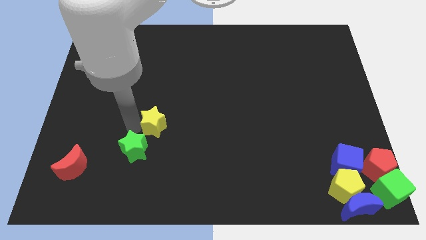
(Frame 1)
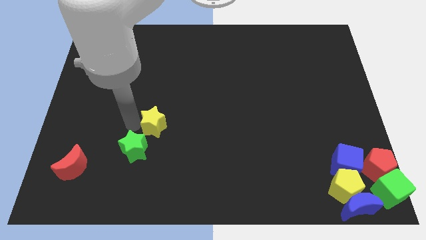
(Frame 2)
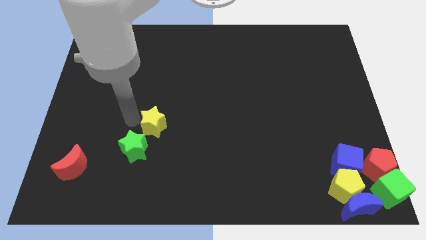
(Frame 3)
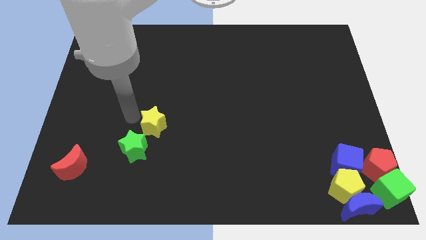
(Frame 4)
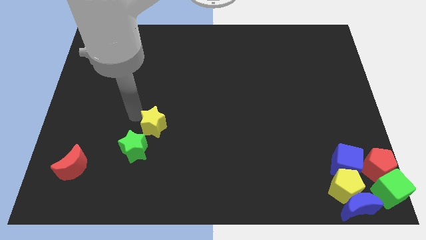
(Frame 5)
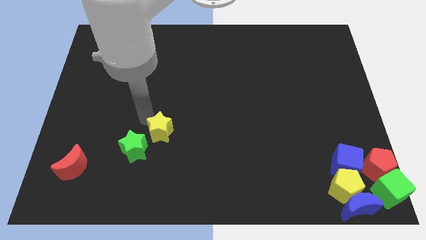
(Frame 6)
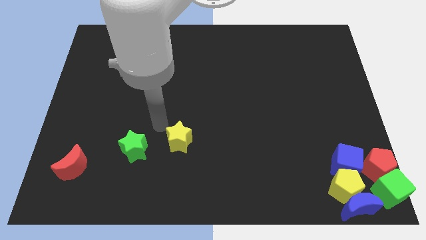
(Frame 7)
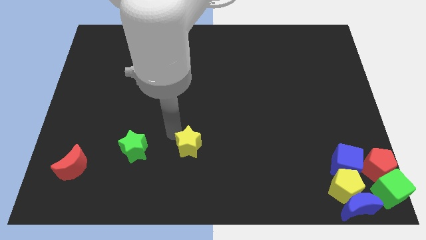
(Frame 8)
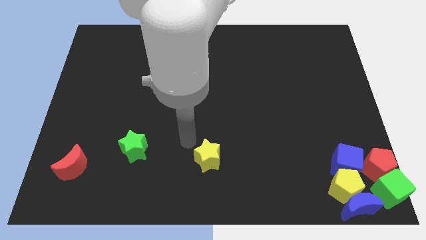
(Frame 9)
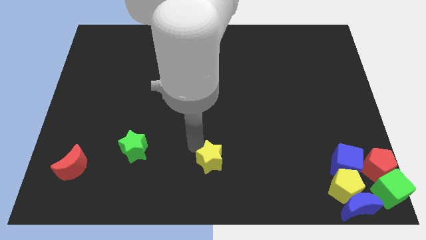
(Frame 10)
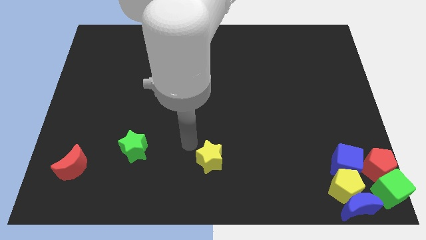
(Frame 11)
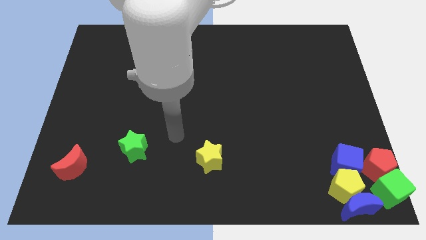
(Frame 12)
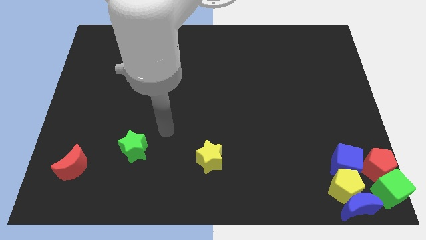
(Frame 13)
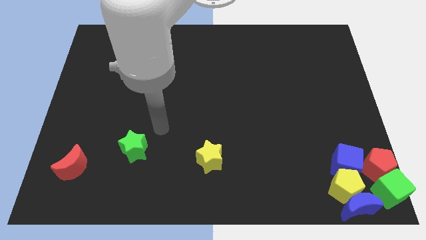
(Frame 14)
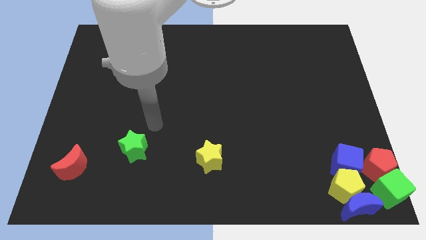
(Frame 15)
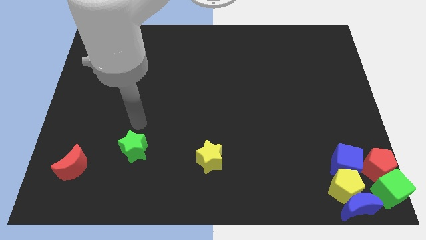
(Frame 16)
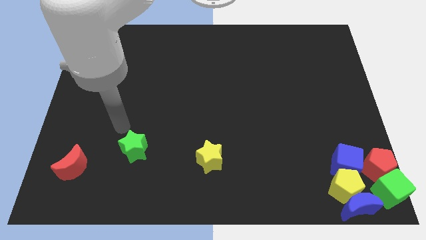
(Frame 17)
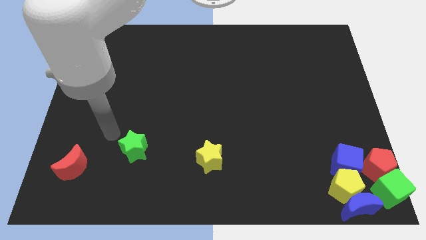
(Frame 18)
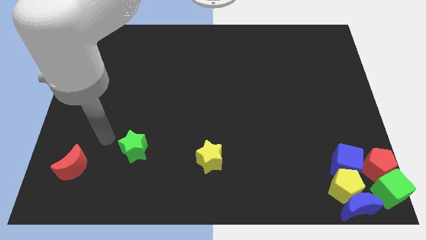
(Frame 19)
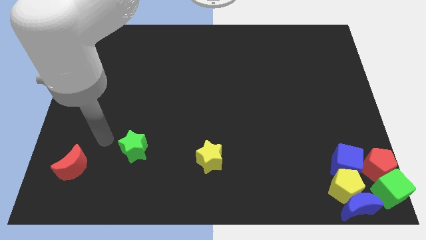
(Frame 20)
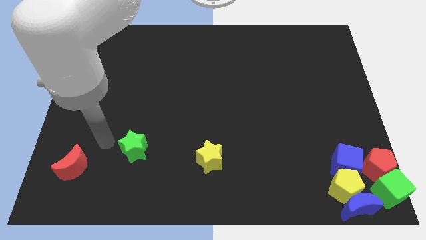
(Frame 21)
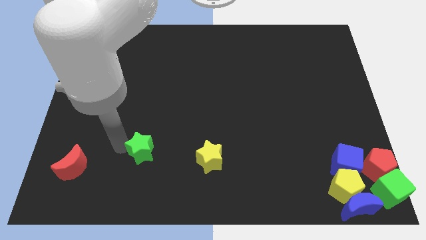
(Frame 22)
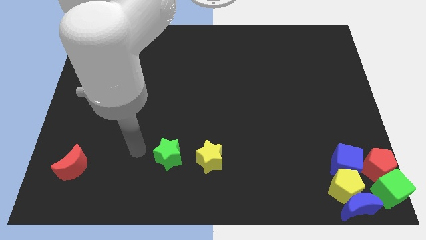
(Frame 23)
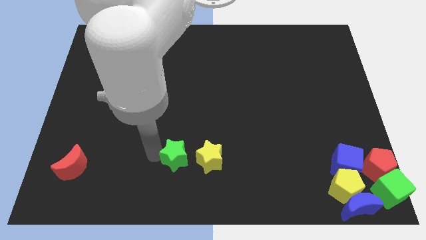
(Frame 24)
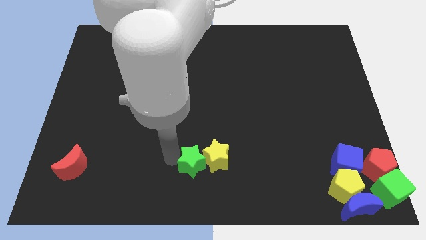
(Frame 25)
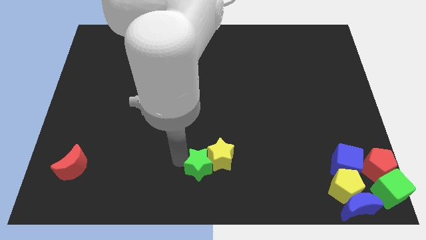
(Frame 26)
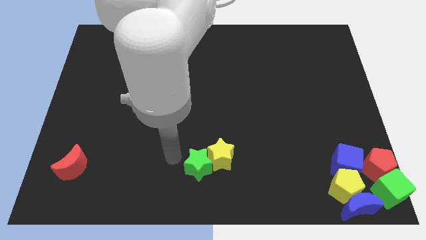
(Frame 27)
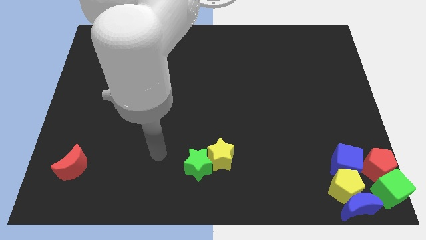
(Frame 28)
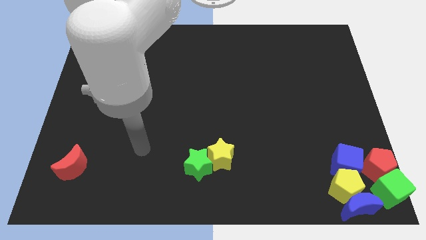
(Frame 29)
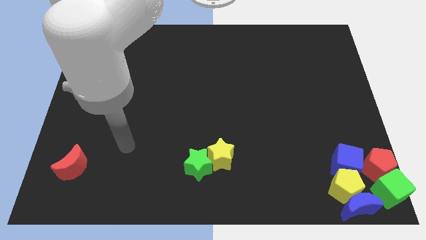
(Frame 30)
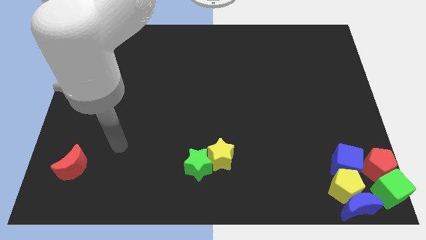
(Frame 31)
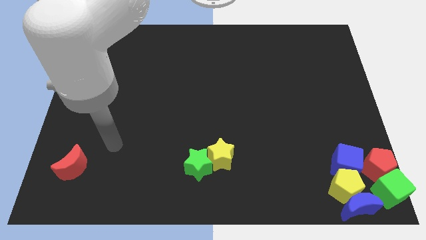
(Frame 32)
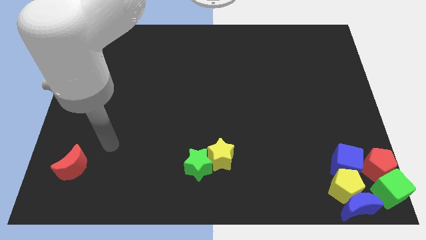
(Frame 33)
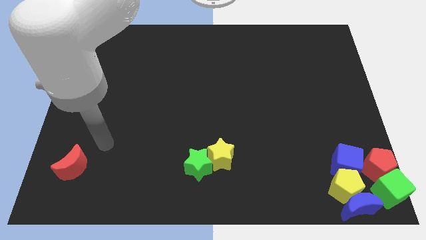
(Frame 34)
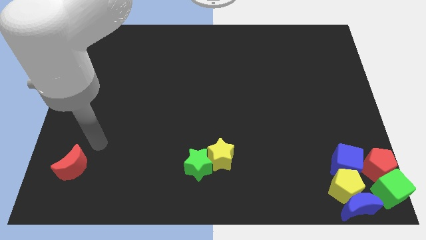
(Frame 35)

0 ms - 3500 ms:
push the yellow star and green star towards the bottom center of the board

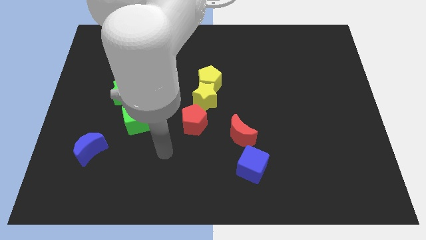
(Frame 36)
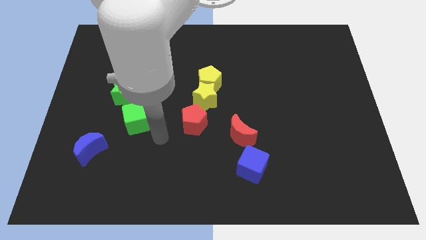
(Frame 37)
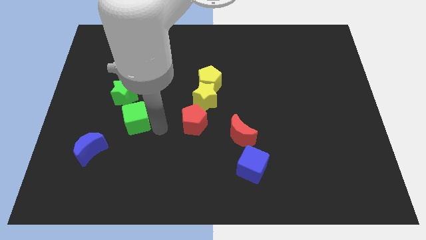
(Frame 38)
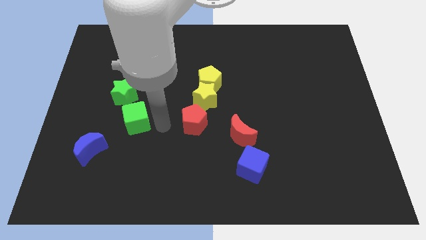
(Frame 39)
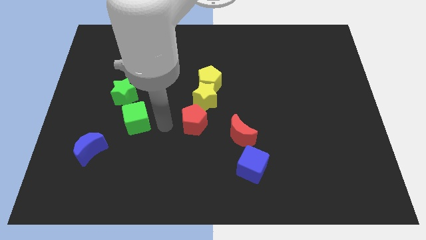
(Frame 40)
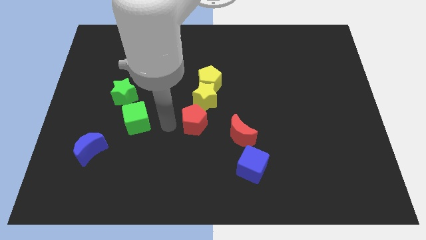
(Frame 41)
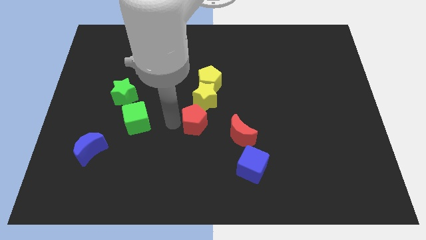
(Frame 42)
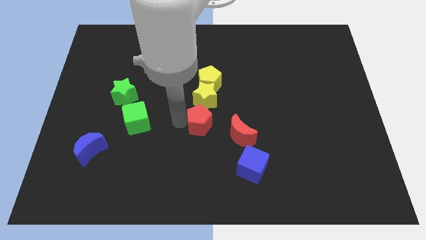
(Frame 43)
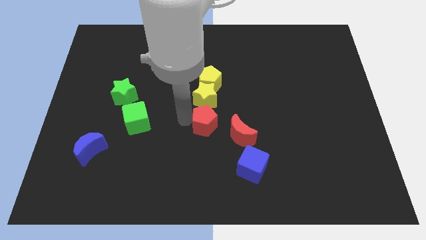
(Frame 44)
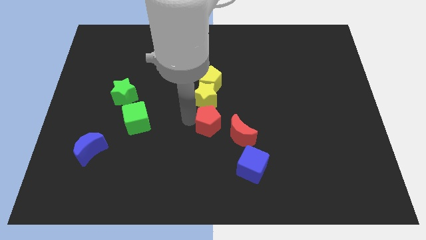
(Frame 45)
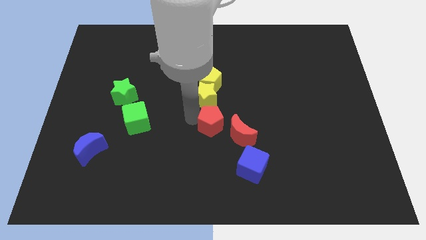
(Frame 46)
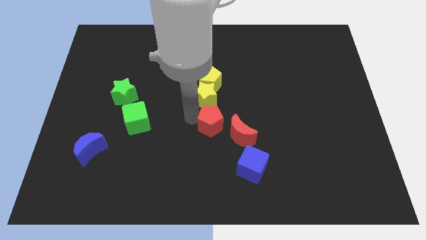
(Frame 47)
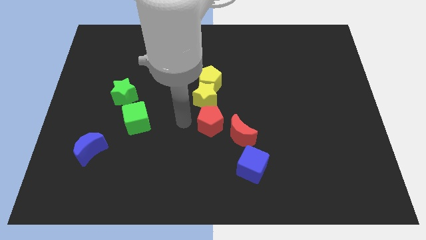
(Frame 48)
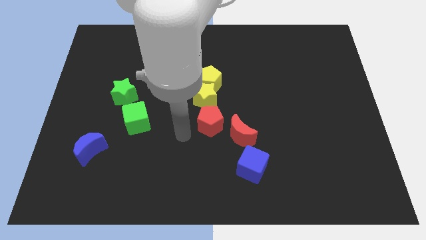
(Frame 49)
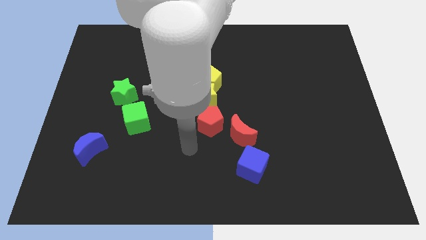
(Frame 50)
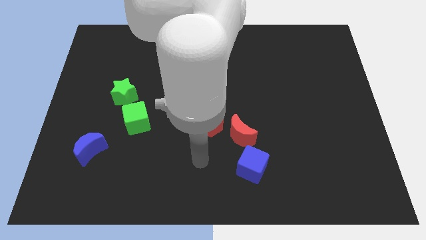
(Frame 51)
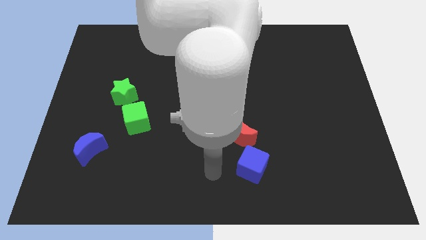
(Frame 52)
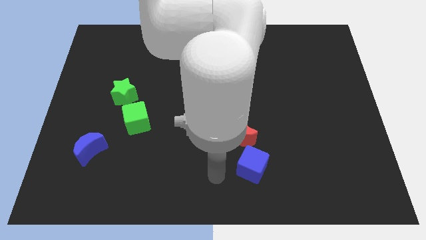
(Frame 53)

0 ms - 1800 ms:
push red pentagon close to the red moon

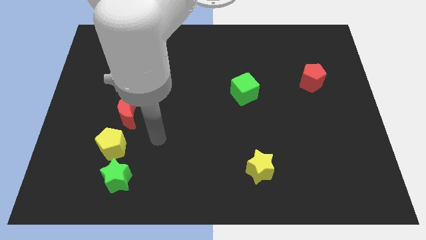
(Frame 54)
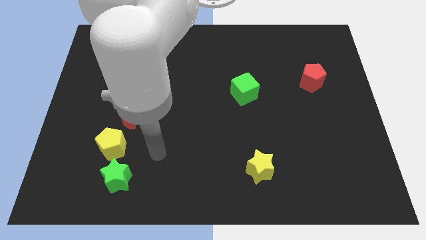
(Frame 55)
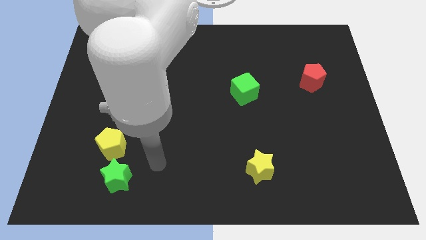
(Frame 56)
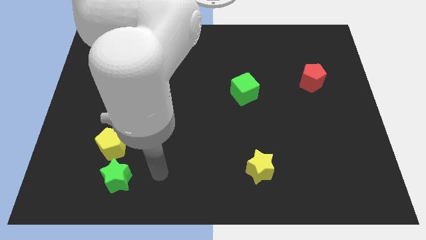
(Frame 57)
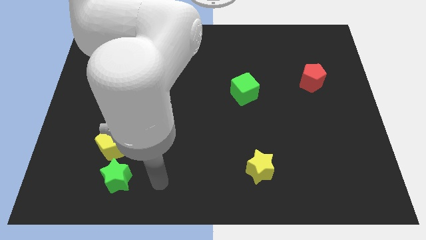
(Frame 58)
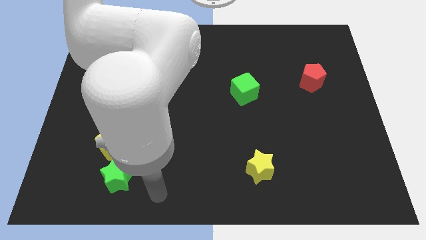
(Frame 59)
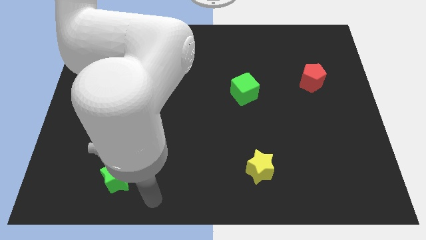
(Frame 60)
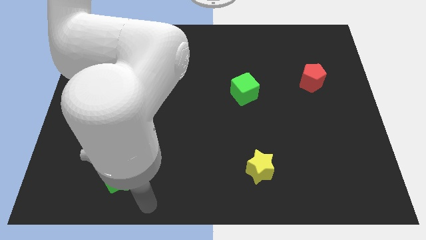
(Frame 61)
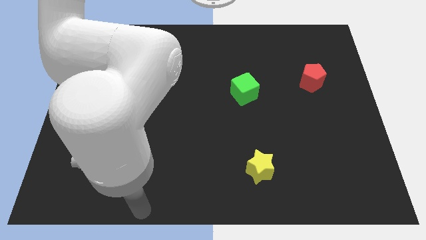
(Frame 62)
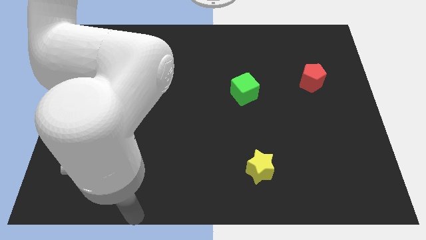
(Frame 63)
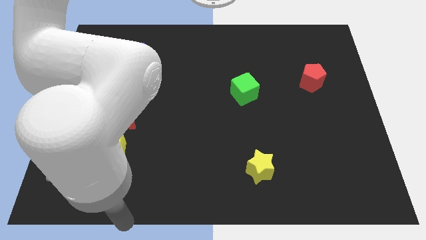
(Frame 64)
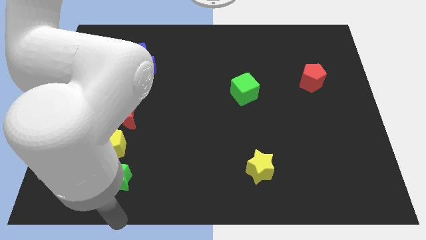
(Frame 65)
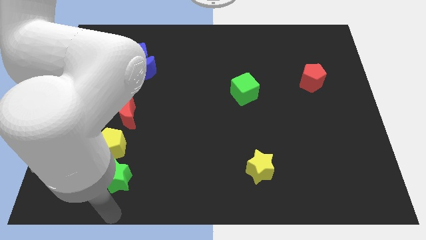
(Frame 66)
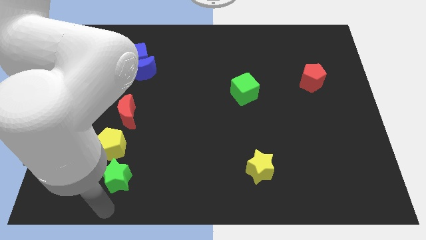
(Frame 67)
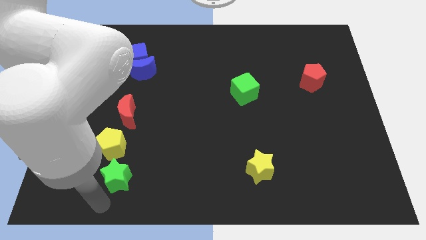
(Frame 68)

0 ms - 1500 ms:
slide your hand to the bottom of the green star

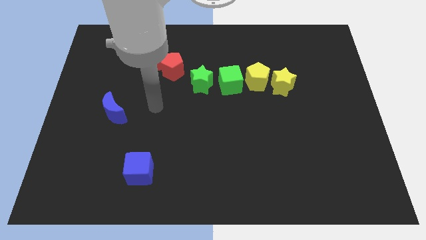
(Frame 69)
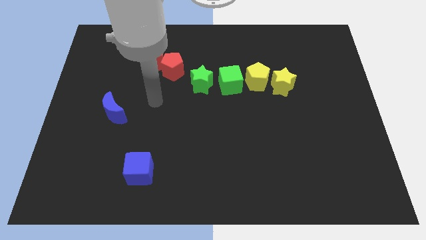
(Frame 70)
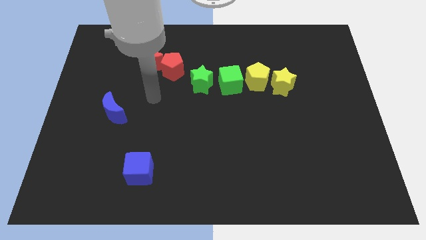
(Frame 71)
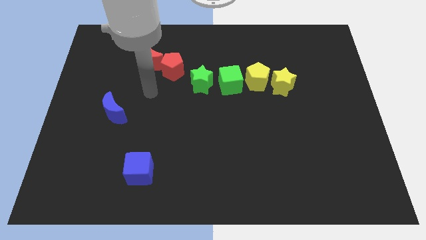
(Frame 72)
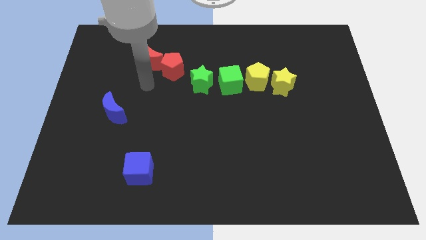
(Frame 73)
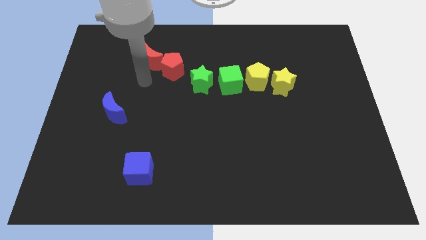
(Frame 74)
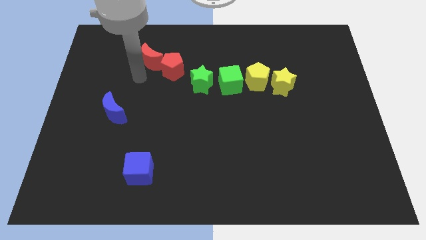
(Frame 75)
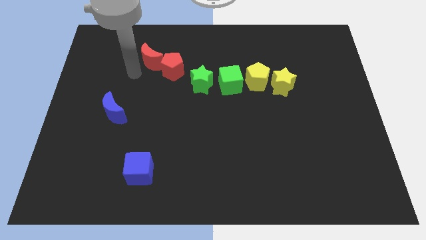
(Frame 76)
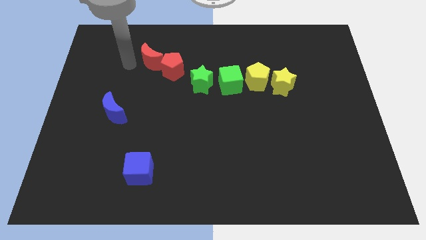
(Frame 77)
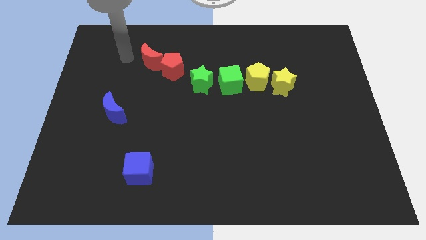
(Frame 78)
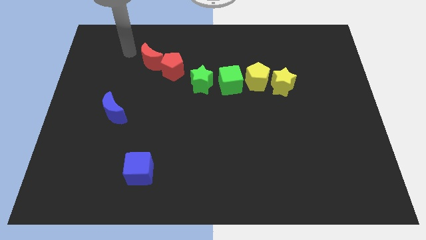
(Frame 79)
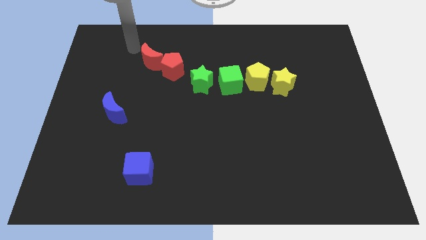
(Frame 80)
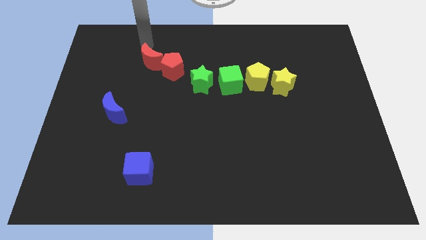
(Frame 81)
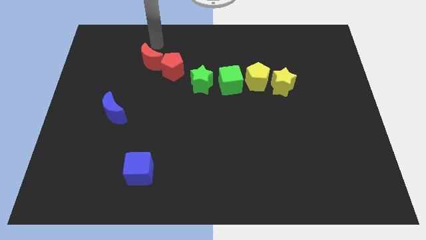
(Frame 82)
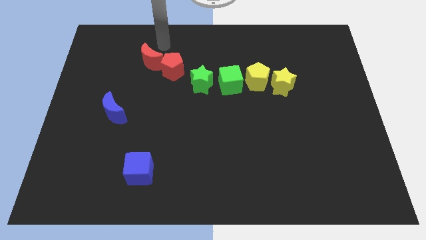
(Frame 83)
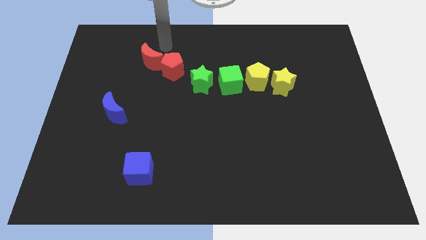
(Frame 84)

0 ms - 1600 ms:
move the arm to the top of red moon

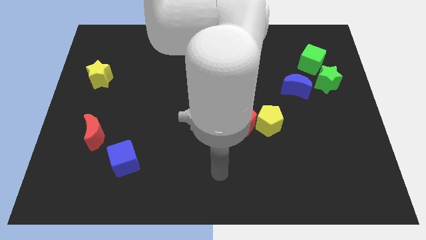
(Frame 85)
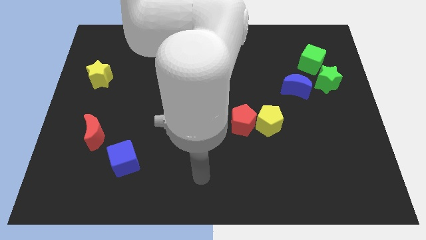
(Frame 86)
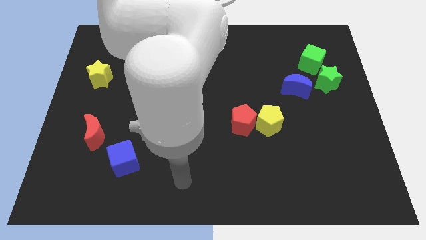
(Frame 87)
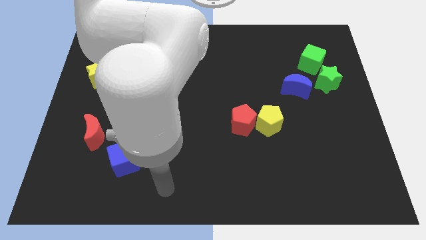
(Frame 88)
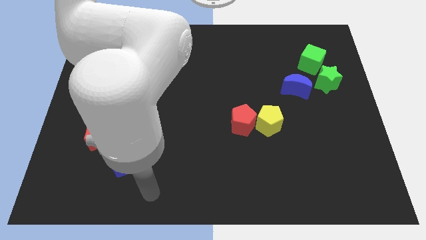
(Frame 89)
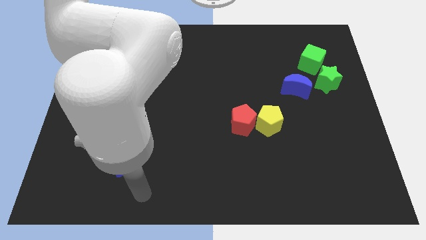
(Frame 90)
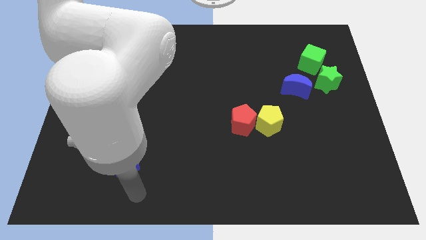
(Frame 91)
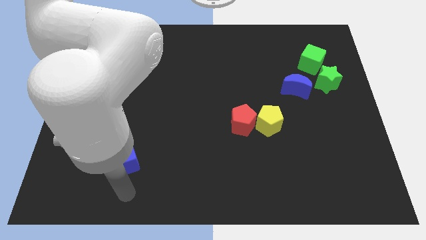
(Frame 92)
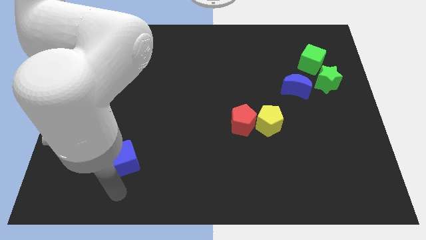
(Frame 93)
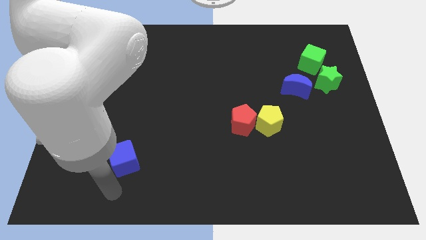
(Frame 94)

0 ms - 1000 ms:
place arm at the bottom of blue cube
